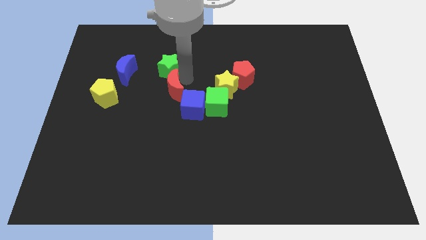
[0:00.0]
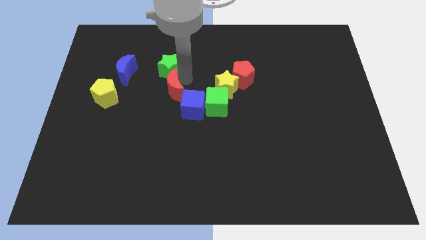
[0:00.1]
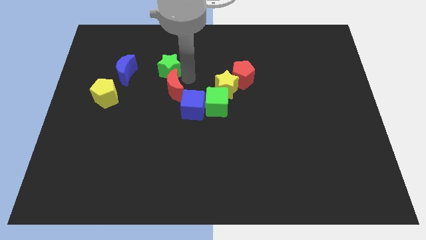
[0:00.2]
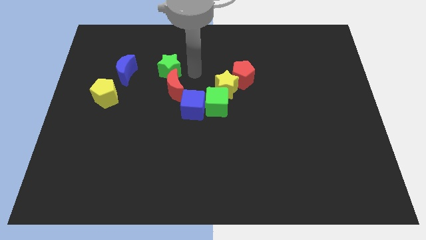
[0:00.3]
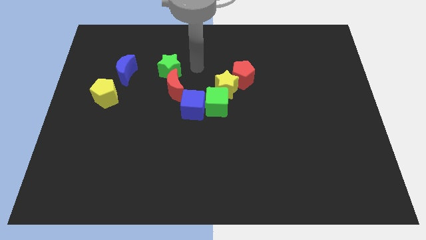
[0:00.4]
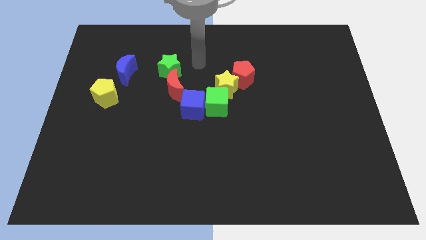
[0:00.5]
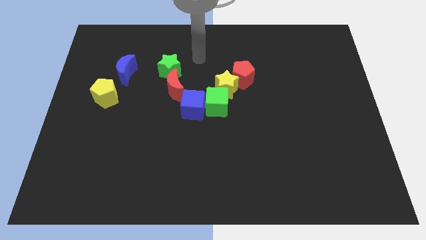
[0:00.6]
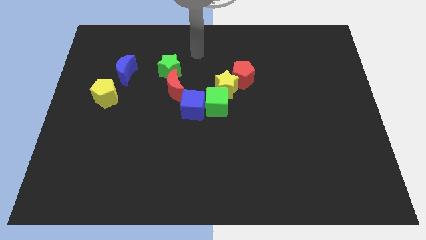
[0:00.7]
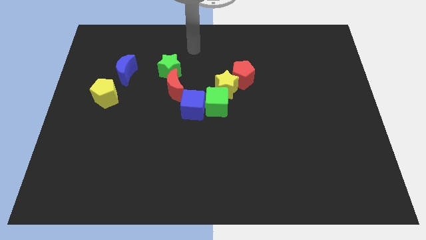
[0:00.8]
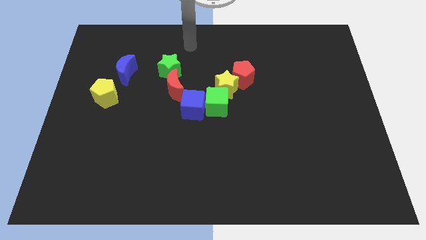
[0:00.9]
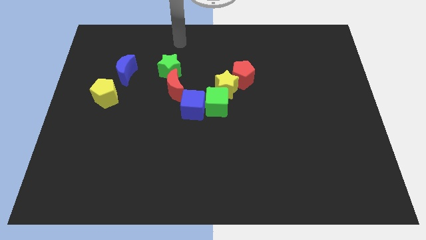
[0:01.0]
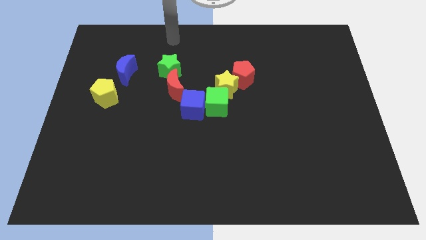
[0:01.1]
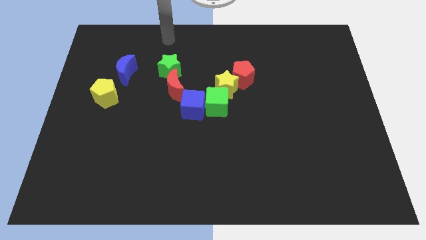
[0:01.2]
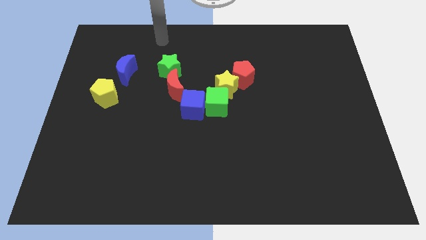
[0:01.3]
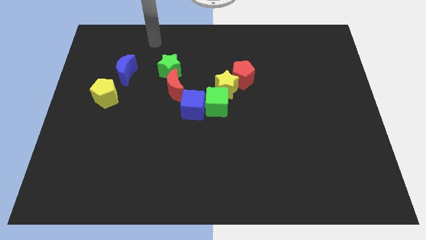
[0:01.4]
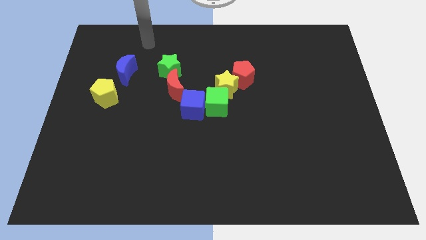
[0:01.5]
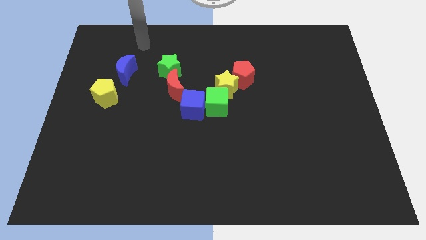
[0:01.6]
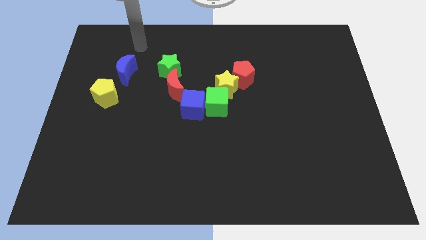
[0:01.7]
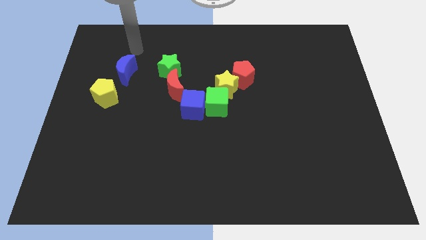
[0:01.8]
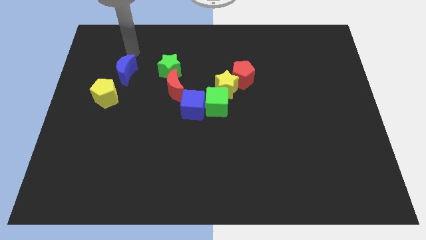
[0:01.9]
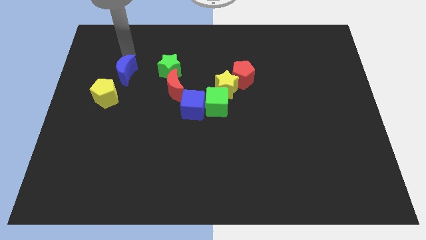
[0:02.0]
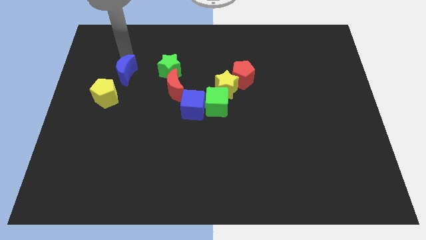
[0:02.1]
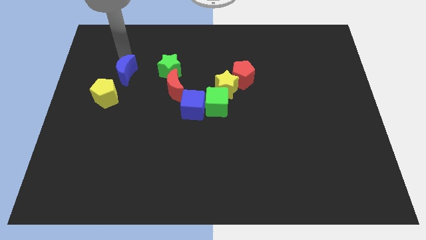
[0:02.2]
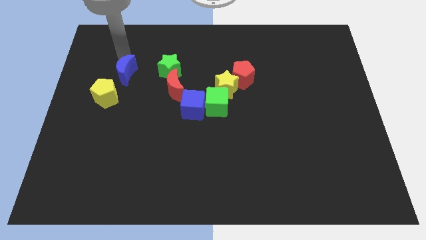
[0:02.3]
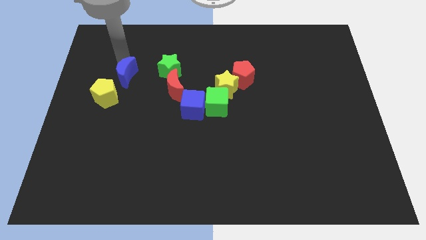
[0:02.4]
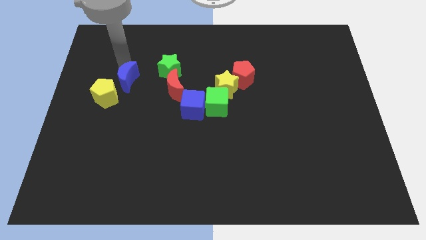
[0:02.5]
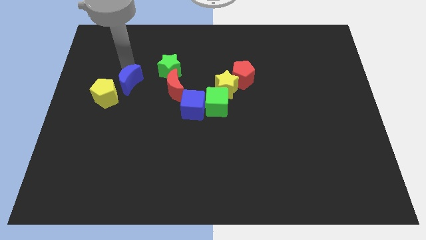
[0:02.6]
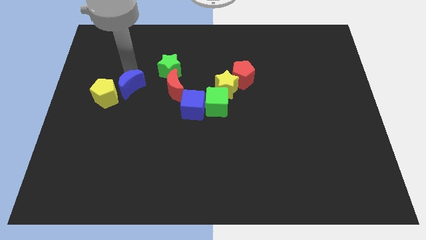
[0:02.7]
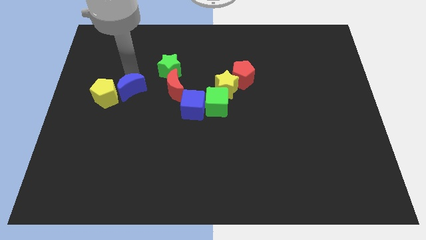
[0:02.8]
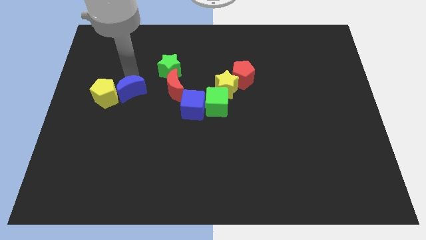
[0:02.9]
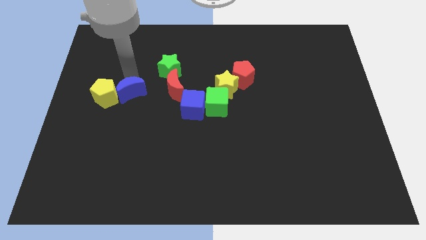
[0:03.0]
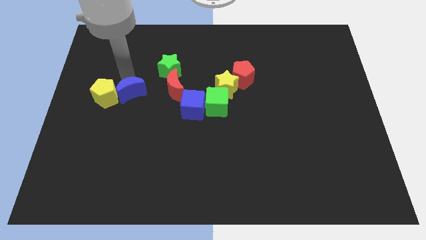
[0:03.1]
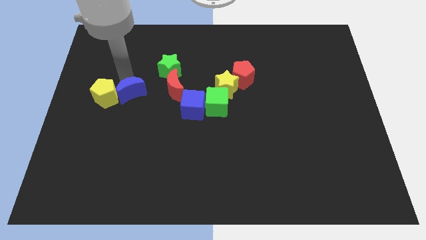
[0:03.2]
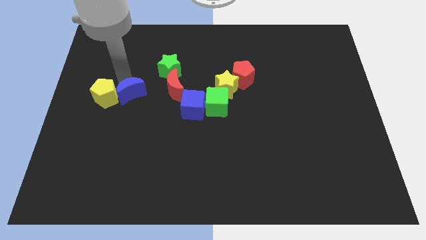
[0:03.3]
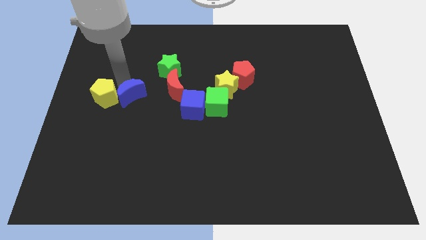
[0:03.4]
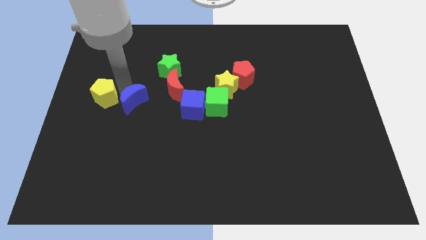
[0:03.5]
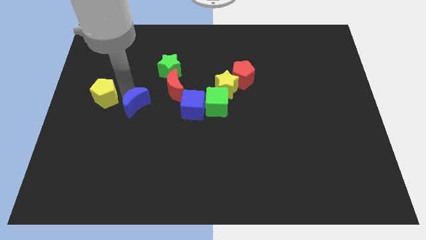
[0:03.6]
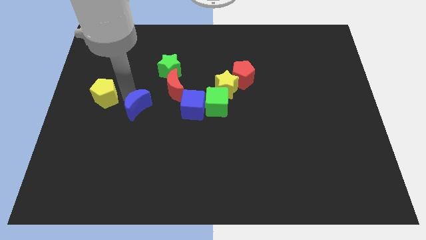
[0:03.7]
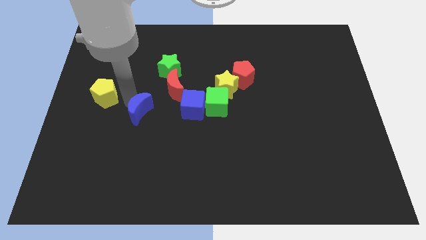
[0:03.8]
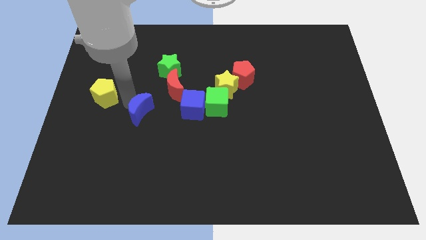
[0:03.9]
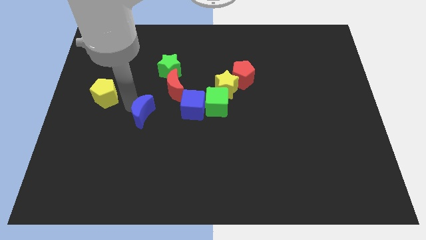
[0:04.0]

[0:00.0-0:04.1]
place the blue crescent towards the bottom right side of the yellow pentagon

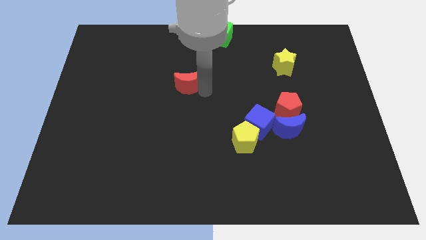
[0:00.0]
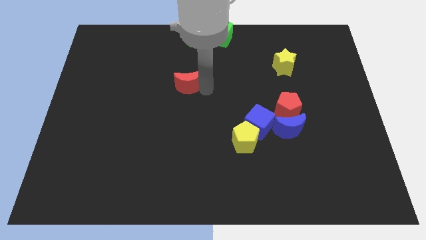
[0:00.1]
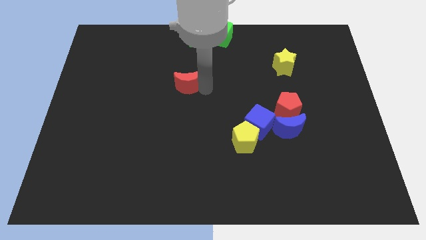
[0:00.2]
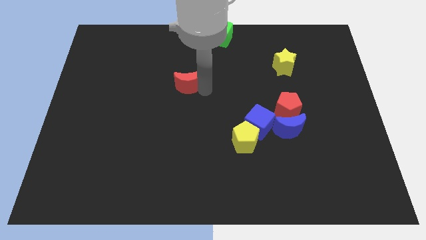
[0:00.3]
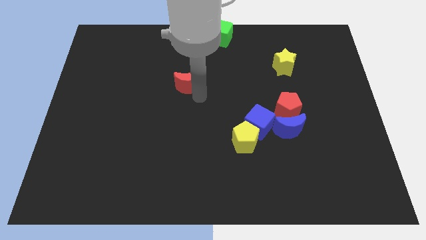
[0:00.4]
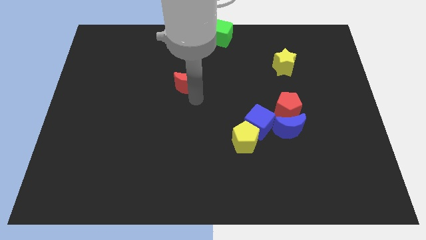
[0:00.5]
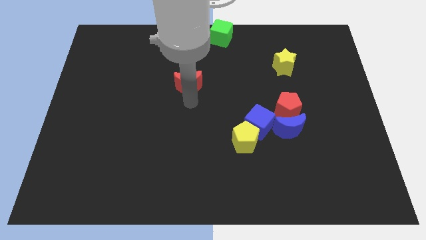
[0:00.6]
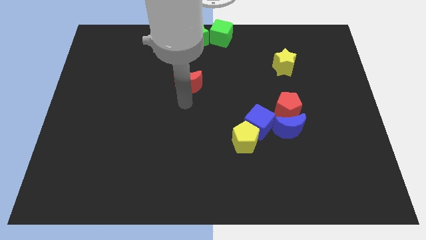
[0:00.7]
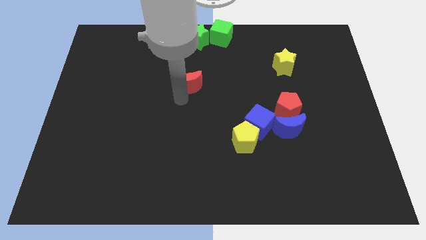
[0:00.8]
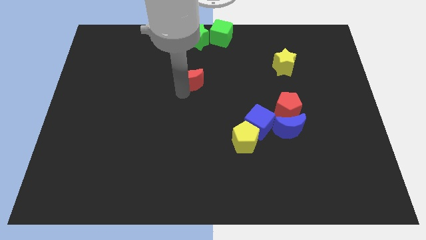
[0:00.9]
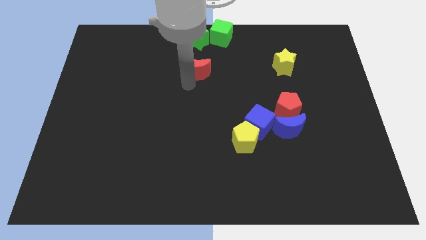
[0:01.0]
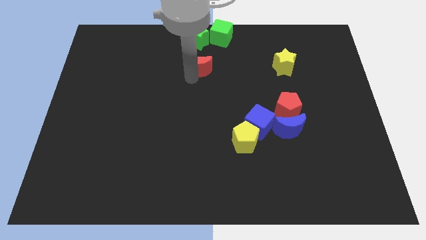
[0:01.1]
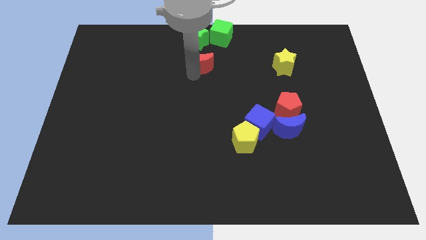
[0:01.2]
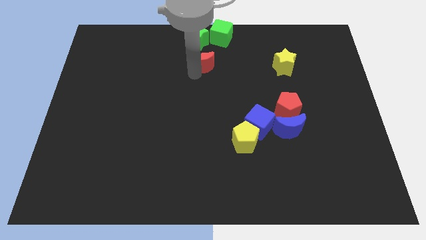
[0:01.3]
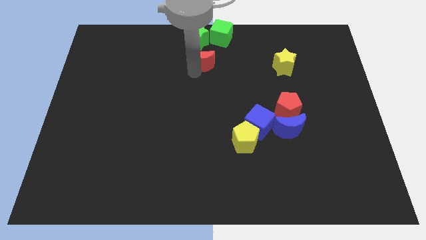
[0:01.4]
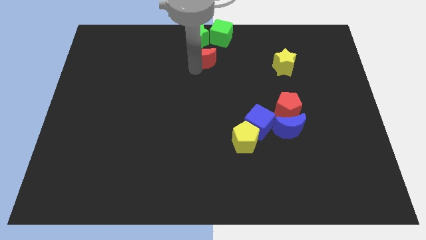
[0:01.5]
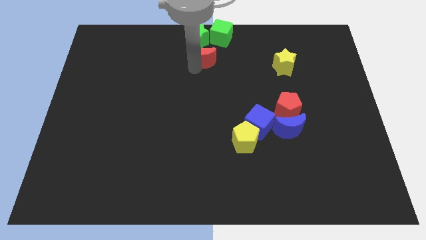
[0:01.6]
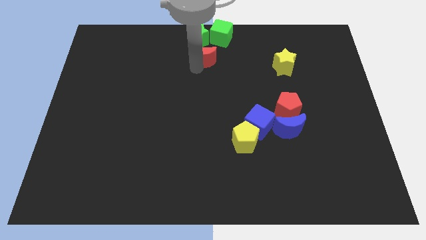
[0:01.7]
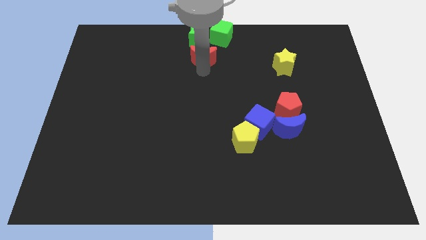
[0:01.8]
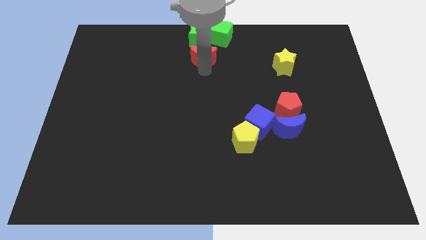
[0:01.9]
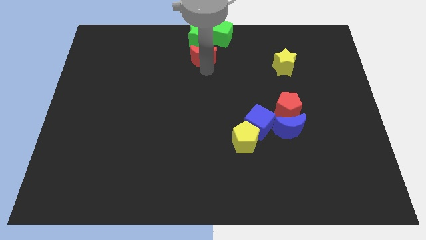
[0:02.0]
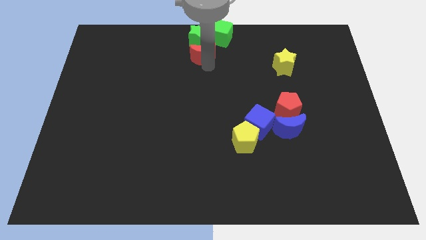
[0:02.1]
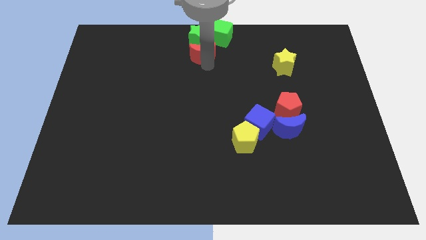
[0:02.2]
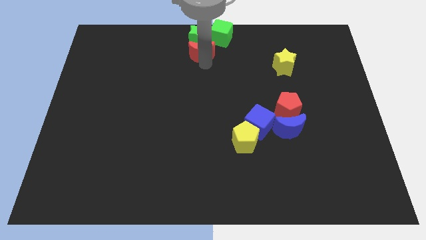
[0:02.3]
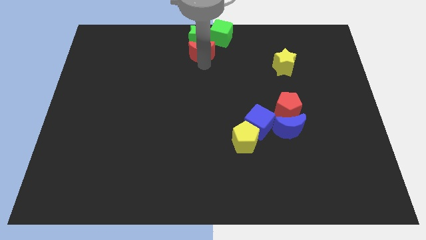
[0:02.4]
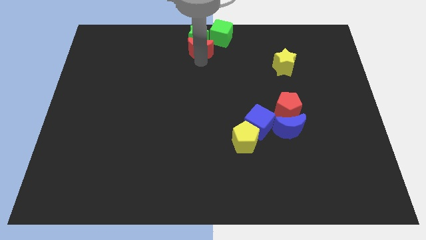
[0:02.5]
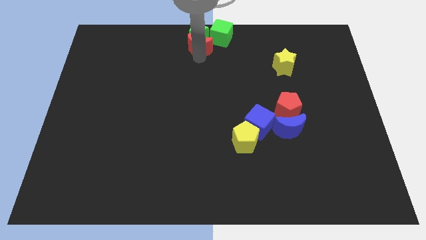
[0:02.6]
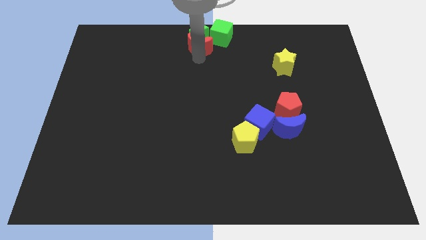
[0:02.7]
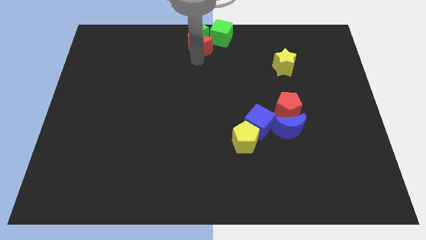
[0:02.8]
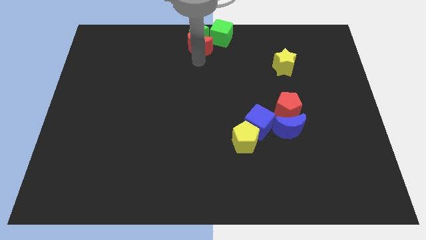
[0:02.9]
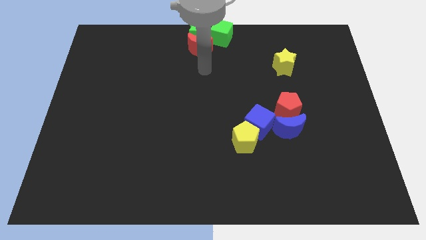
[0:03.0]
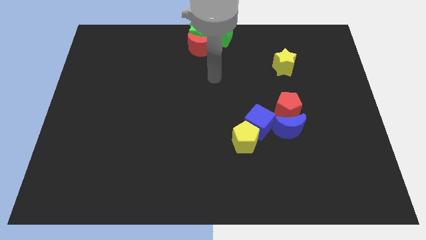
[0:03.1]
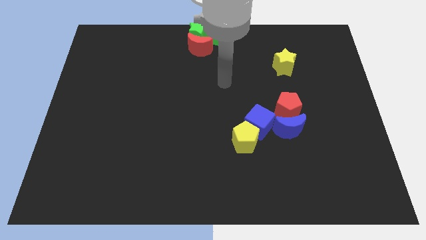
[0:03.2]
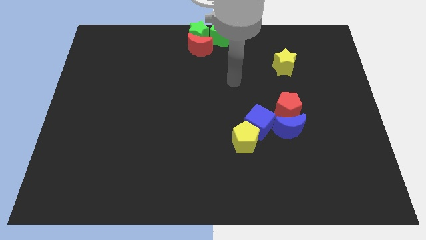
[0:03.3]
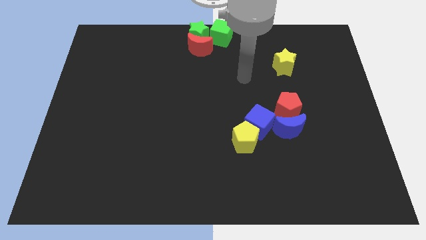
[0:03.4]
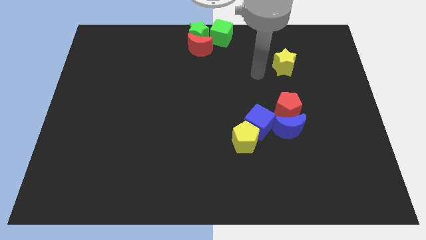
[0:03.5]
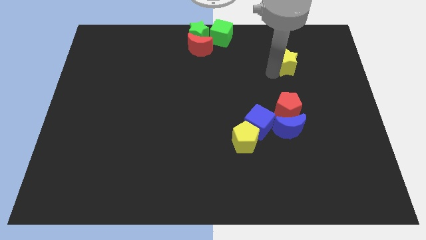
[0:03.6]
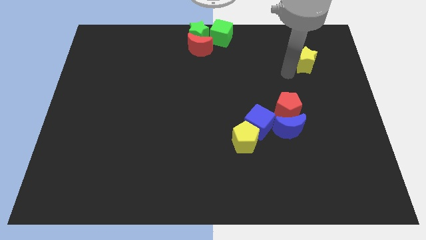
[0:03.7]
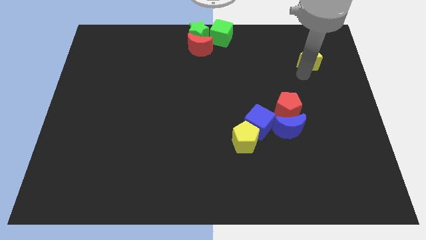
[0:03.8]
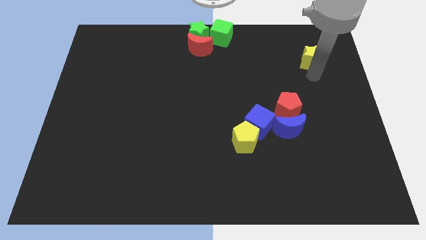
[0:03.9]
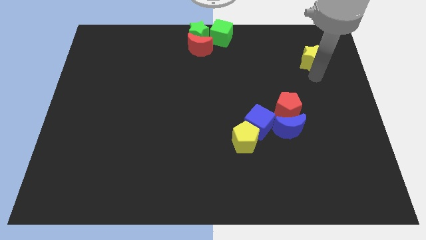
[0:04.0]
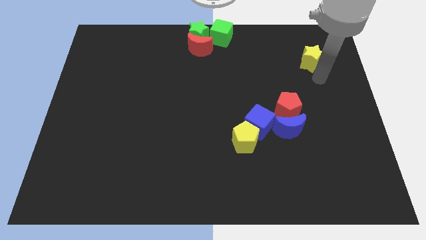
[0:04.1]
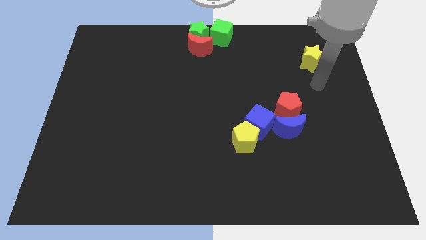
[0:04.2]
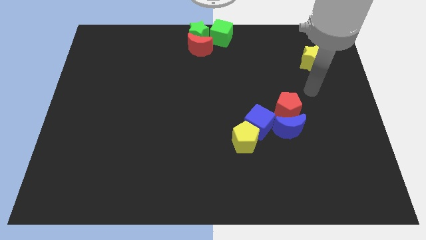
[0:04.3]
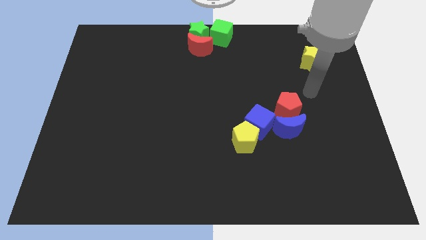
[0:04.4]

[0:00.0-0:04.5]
place the red crescent at the bottom of the green star

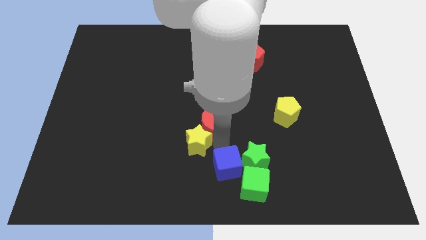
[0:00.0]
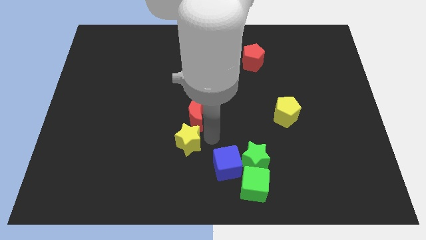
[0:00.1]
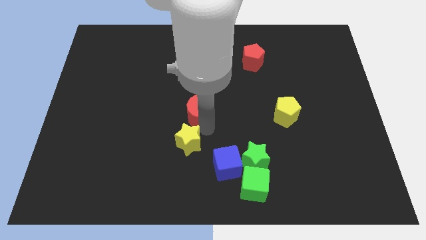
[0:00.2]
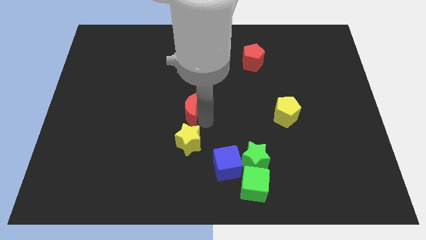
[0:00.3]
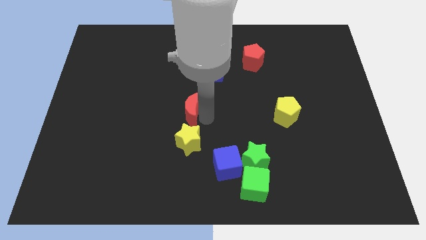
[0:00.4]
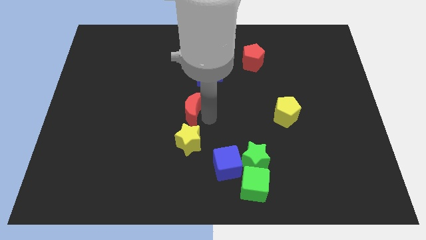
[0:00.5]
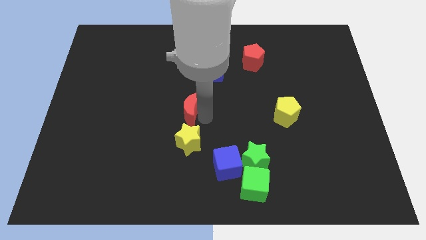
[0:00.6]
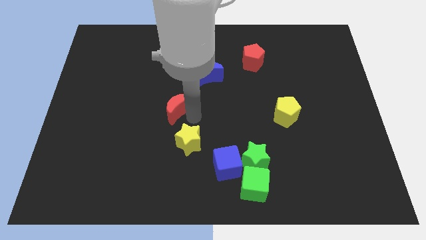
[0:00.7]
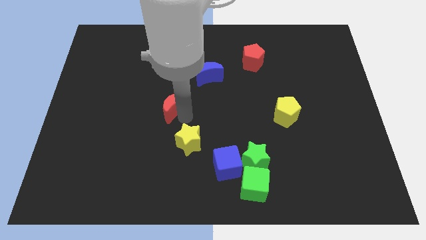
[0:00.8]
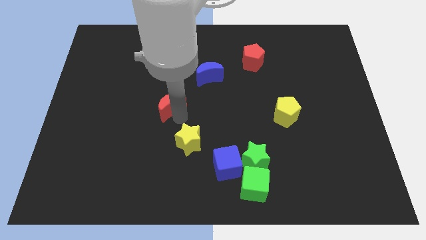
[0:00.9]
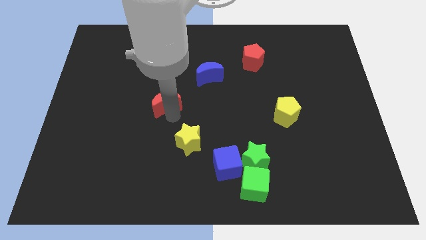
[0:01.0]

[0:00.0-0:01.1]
separate red moon from yellow star
